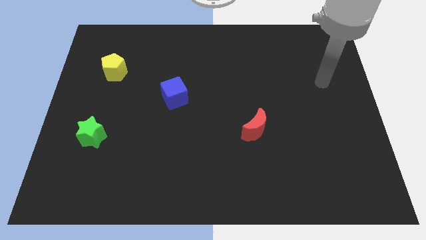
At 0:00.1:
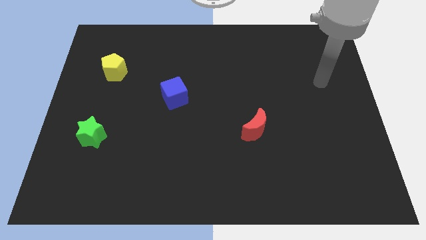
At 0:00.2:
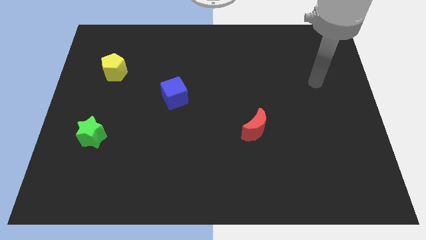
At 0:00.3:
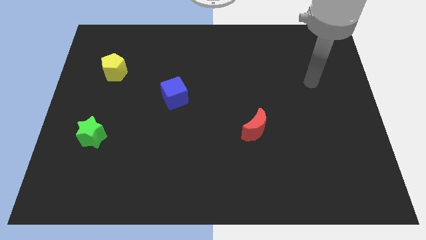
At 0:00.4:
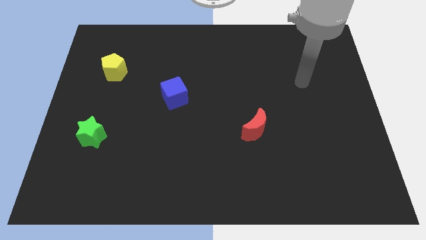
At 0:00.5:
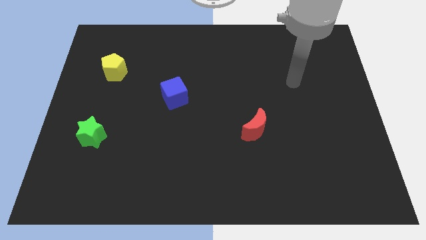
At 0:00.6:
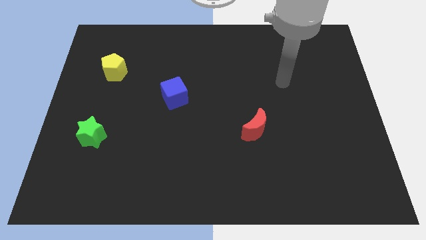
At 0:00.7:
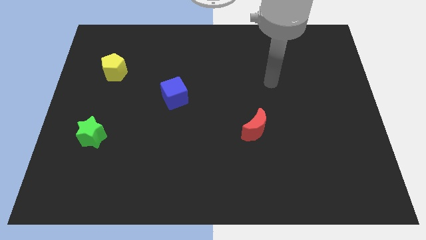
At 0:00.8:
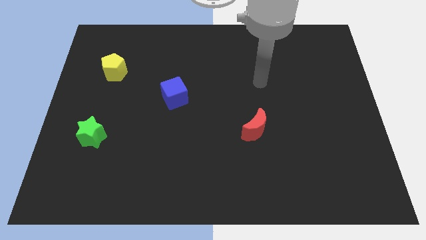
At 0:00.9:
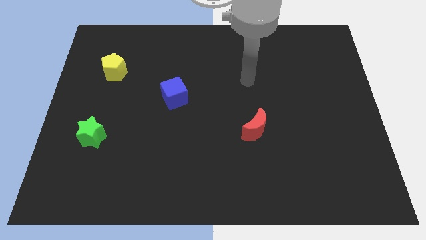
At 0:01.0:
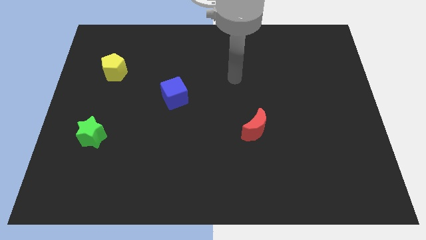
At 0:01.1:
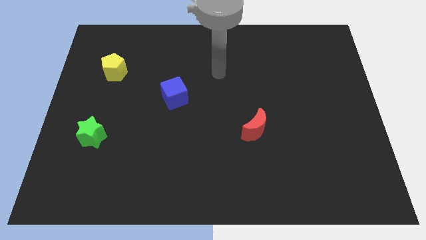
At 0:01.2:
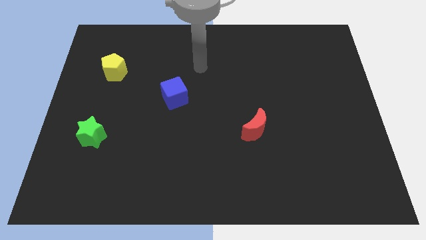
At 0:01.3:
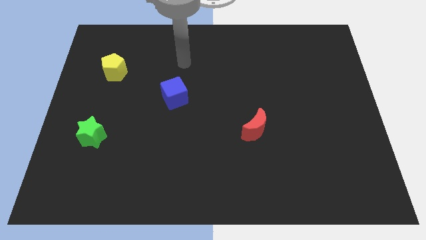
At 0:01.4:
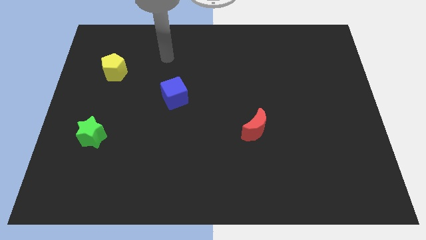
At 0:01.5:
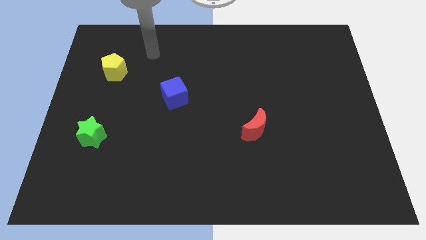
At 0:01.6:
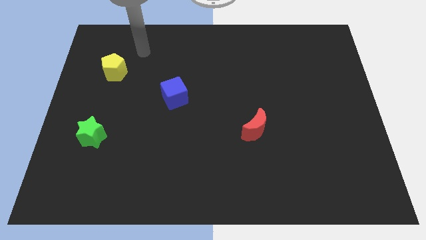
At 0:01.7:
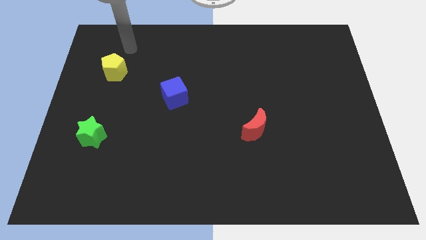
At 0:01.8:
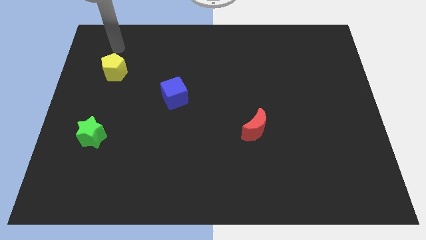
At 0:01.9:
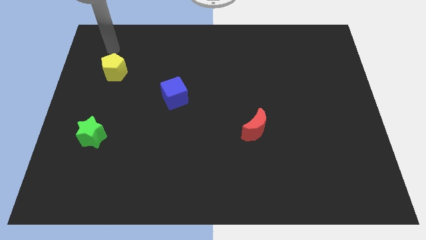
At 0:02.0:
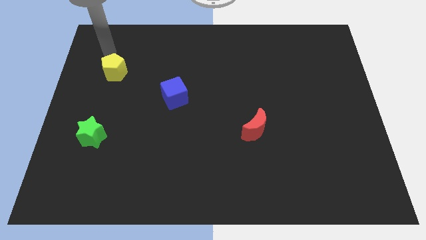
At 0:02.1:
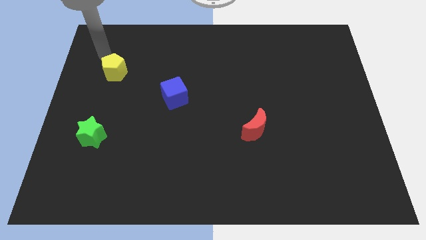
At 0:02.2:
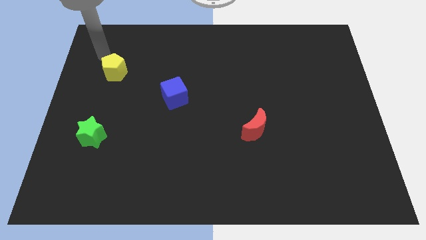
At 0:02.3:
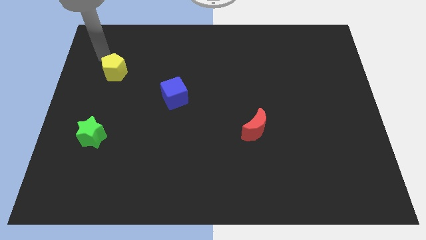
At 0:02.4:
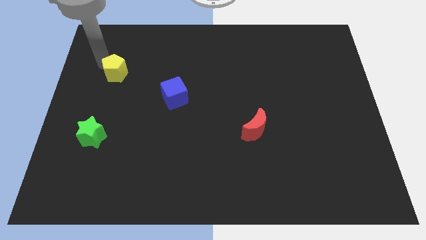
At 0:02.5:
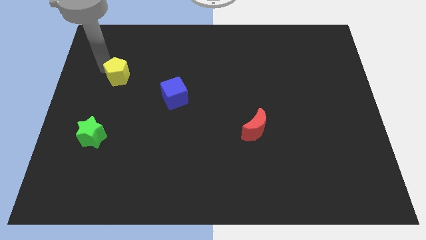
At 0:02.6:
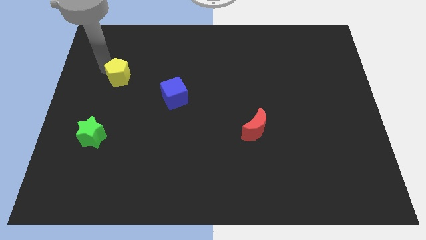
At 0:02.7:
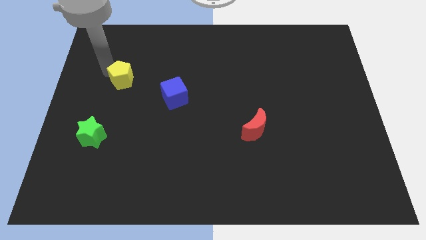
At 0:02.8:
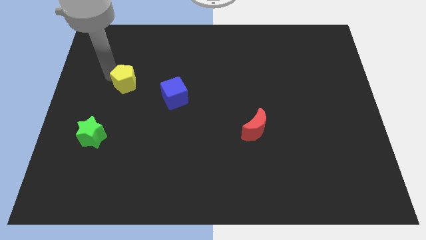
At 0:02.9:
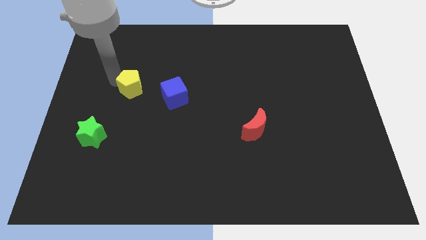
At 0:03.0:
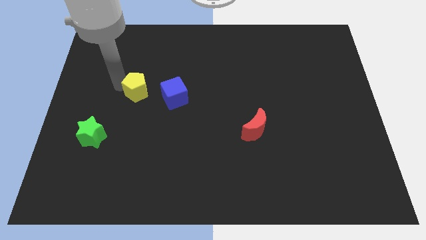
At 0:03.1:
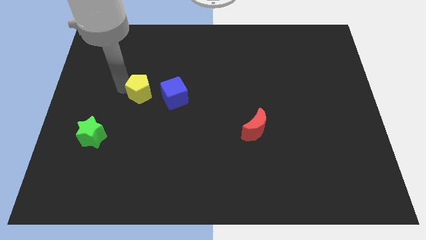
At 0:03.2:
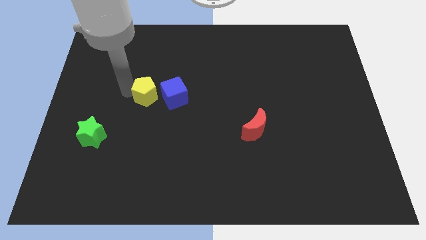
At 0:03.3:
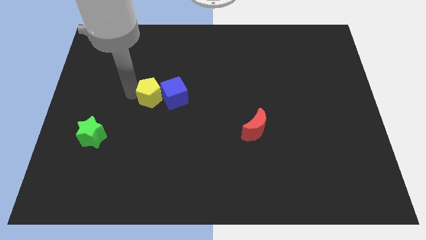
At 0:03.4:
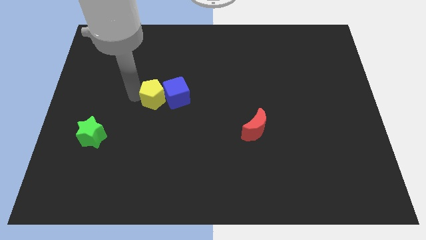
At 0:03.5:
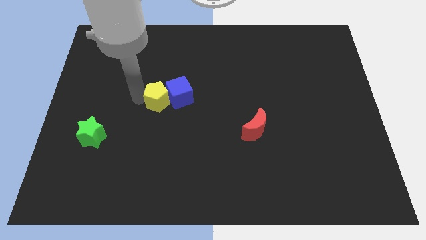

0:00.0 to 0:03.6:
push the yellow pentagon close to the blue cube

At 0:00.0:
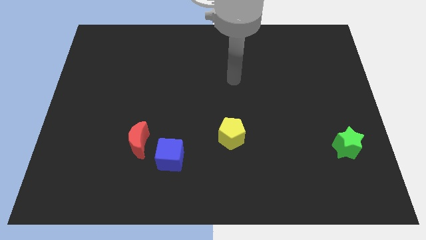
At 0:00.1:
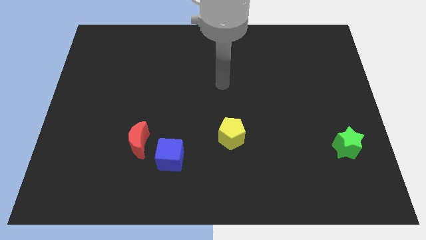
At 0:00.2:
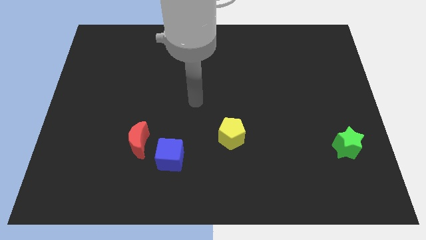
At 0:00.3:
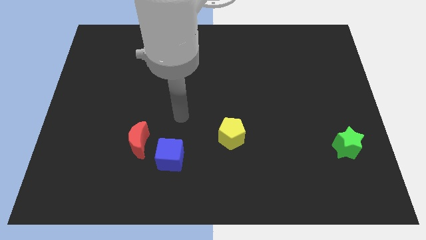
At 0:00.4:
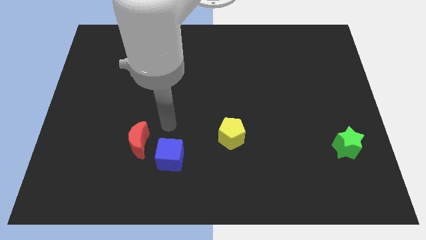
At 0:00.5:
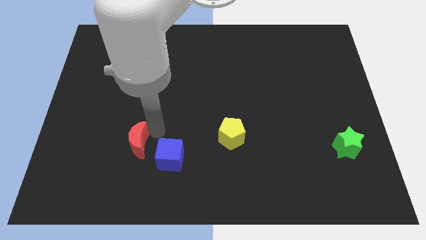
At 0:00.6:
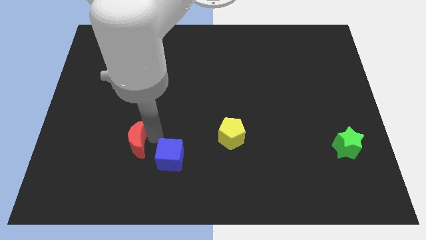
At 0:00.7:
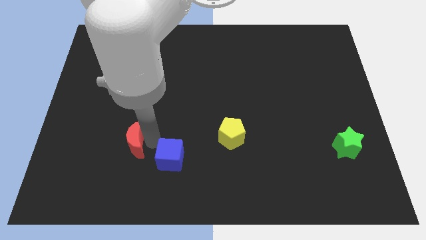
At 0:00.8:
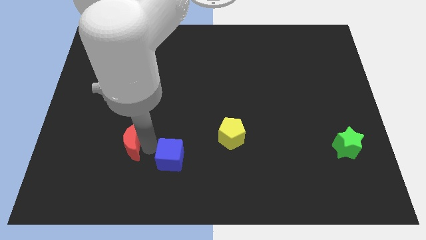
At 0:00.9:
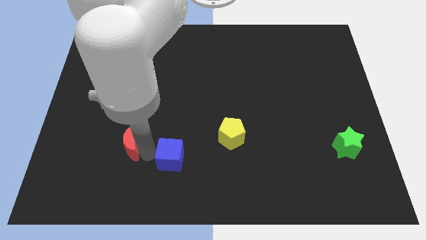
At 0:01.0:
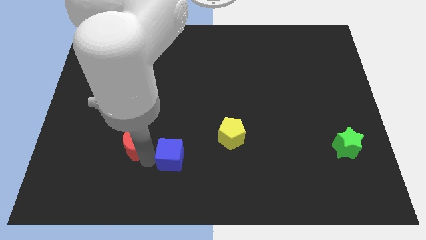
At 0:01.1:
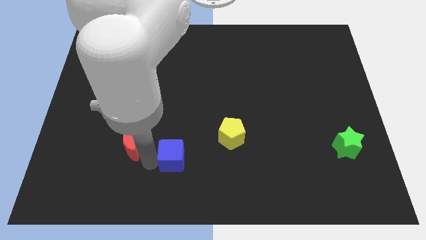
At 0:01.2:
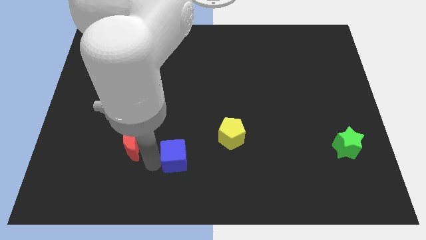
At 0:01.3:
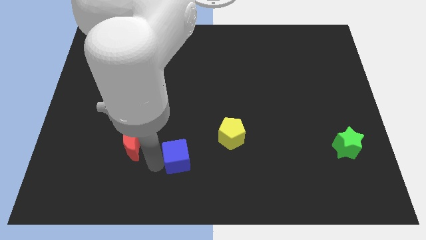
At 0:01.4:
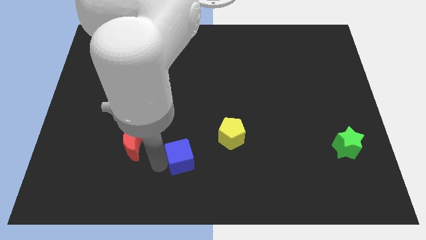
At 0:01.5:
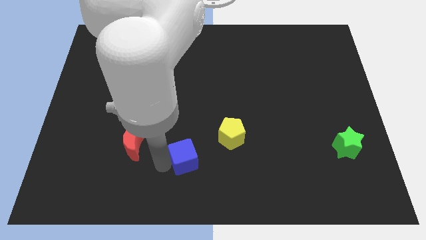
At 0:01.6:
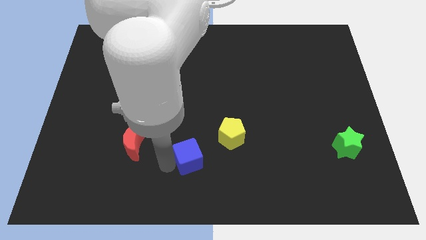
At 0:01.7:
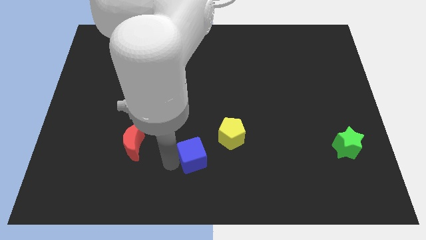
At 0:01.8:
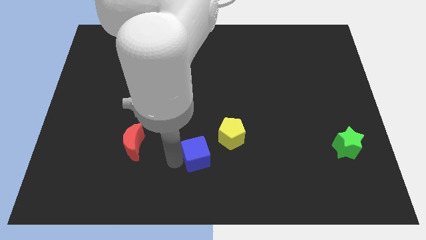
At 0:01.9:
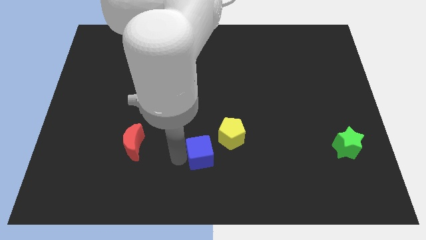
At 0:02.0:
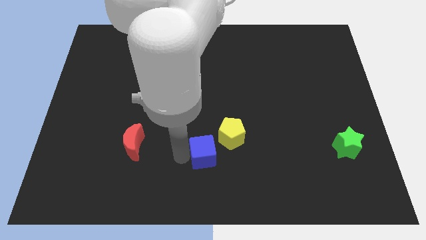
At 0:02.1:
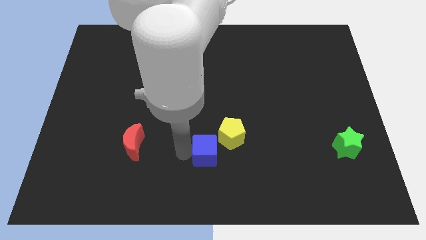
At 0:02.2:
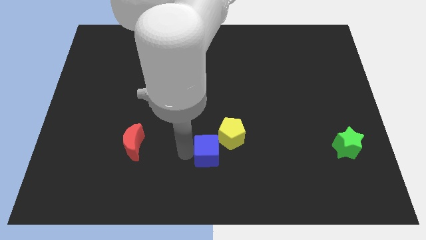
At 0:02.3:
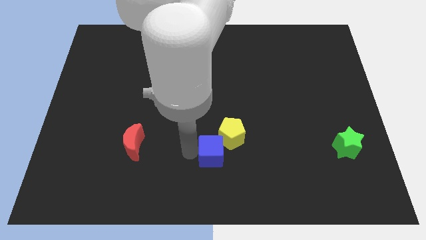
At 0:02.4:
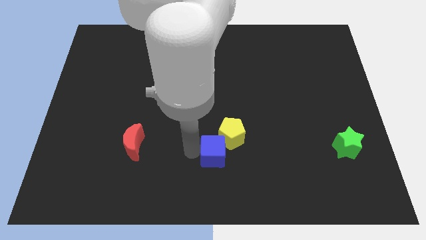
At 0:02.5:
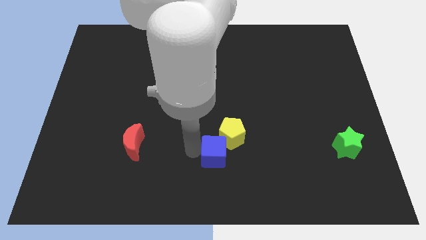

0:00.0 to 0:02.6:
move the cube to the yellow pentagon

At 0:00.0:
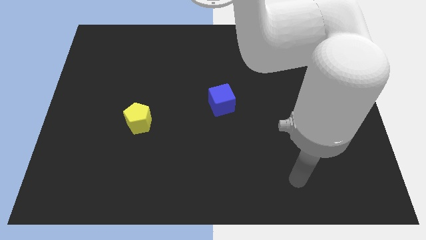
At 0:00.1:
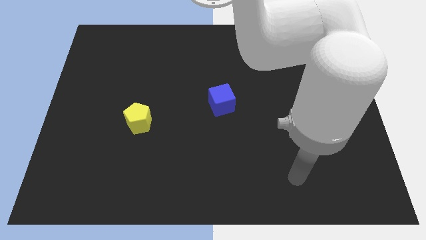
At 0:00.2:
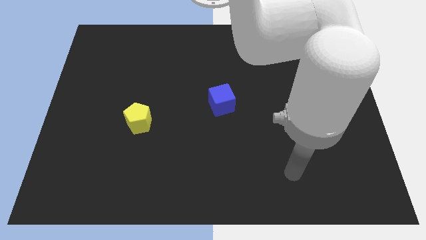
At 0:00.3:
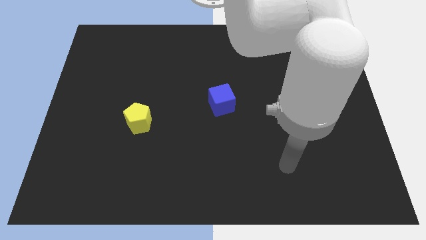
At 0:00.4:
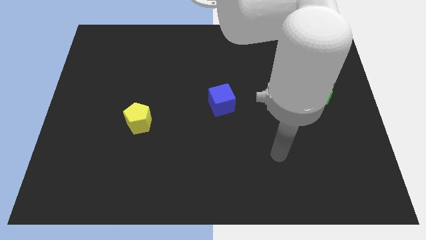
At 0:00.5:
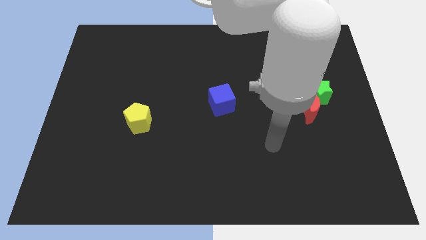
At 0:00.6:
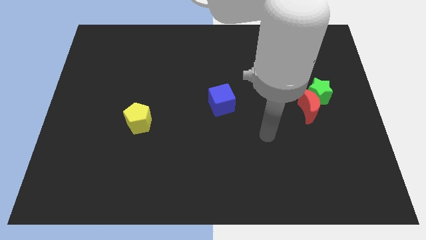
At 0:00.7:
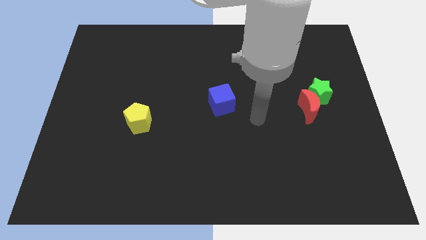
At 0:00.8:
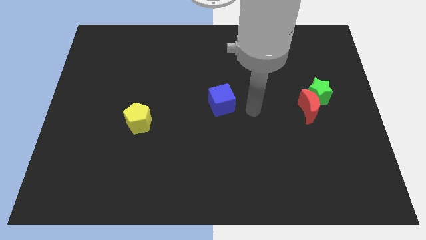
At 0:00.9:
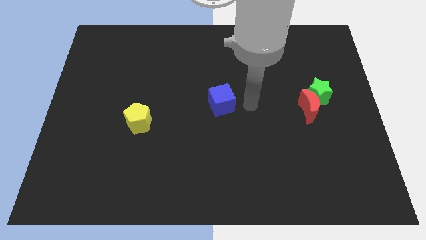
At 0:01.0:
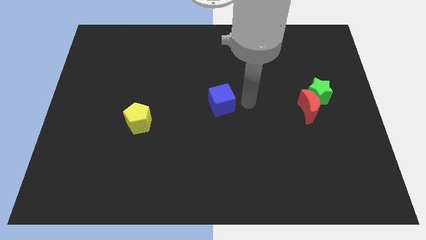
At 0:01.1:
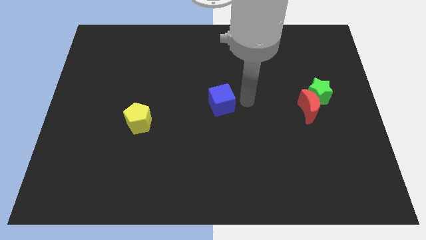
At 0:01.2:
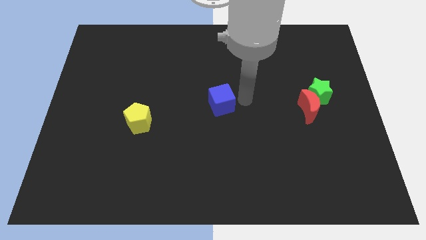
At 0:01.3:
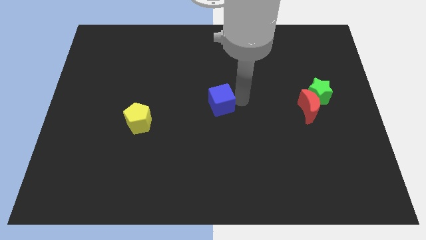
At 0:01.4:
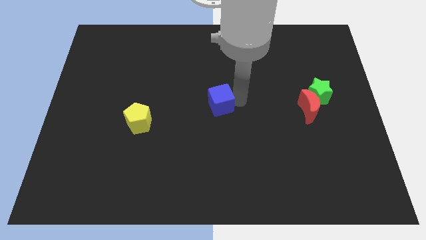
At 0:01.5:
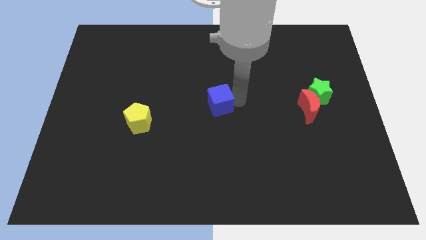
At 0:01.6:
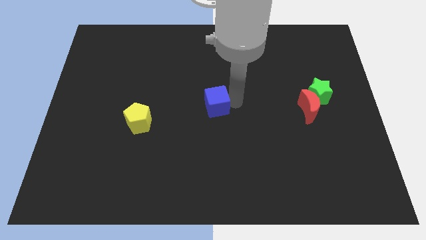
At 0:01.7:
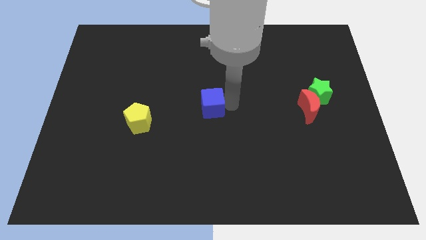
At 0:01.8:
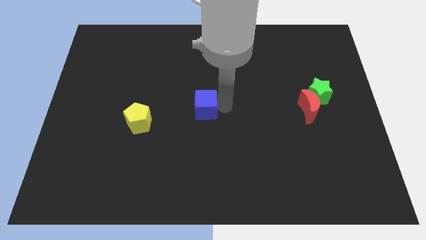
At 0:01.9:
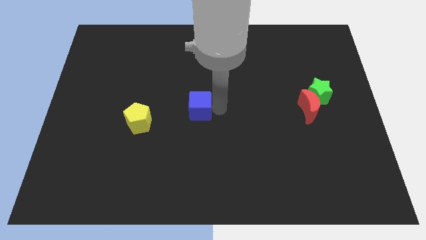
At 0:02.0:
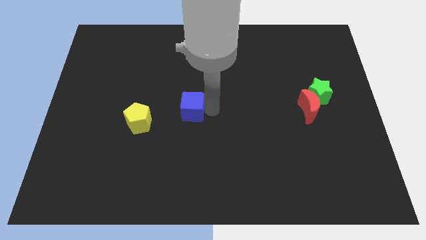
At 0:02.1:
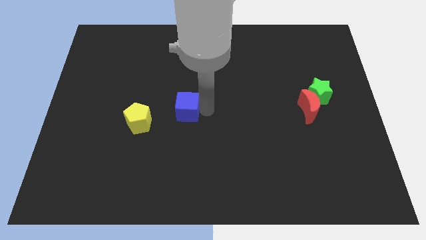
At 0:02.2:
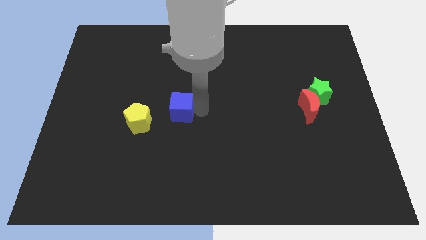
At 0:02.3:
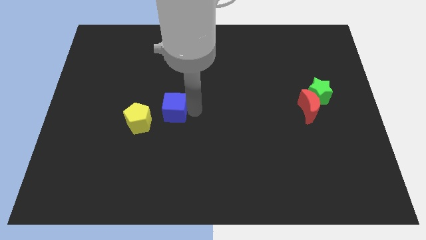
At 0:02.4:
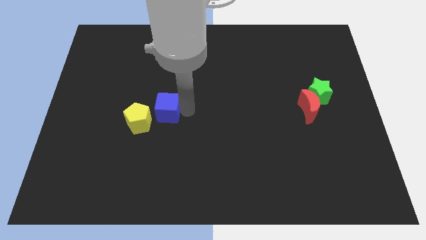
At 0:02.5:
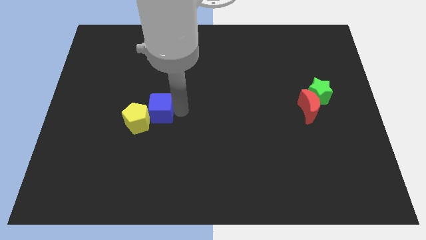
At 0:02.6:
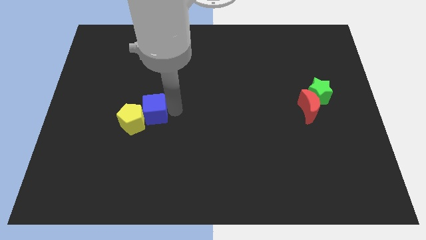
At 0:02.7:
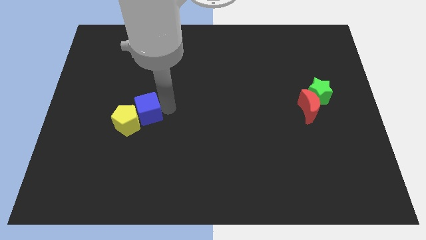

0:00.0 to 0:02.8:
push the blue cube close to the yellow pentagon
